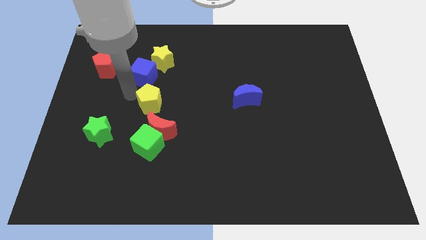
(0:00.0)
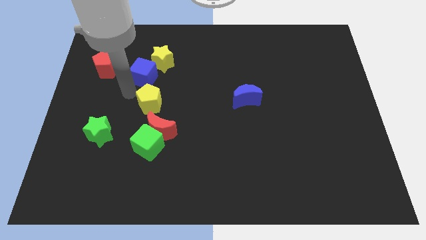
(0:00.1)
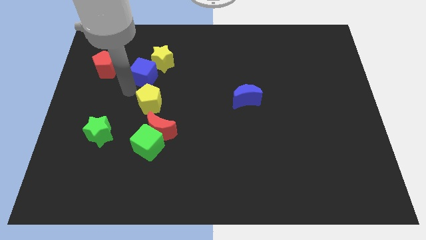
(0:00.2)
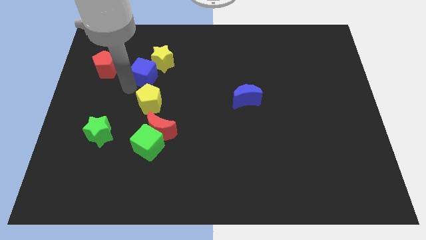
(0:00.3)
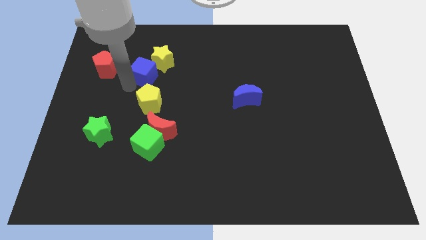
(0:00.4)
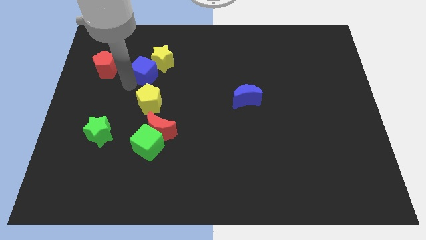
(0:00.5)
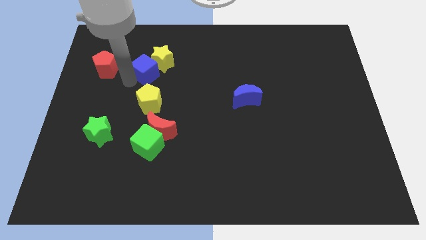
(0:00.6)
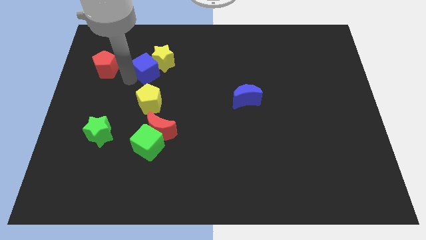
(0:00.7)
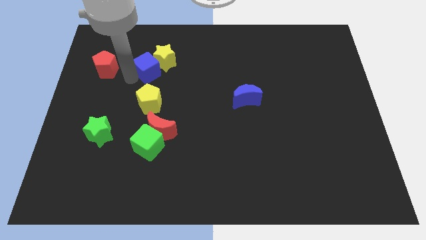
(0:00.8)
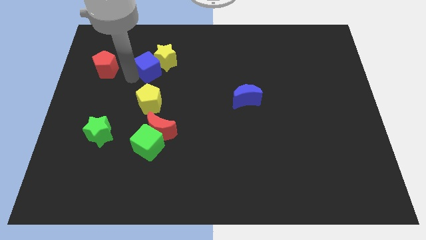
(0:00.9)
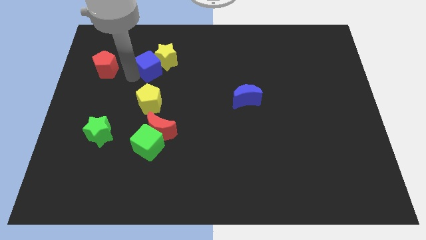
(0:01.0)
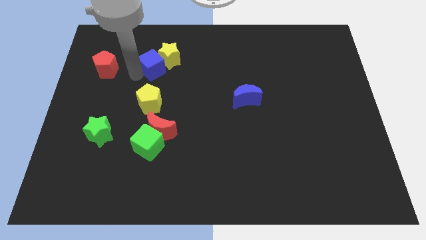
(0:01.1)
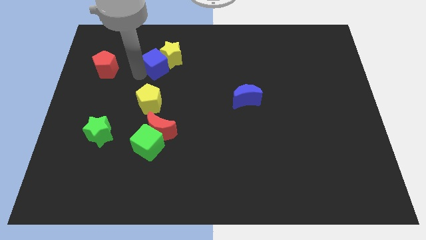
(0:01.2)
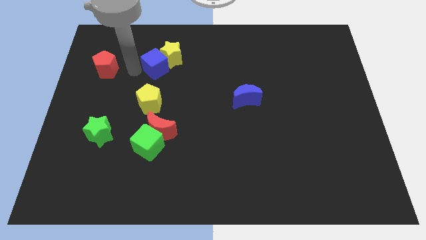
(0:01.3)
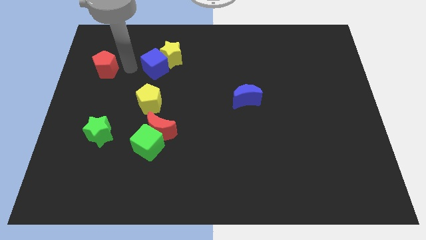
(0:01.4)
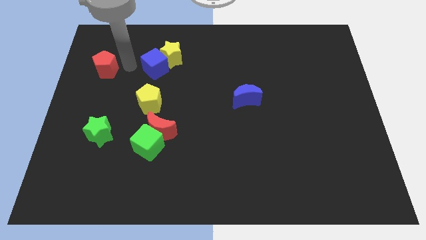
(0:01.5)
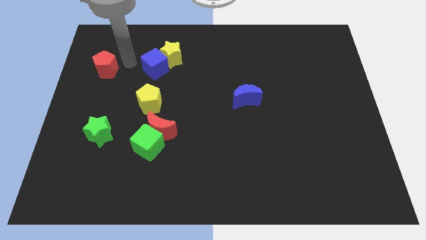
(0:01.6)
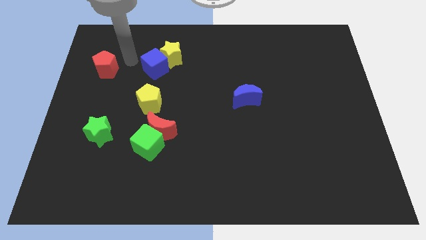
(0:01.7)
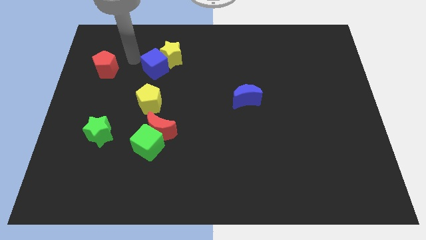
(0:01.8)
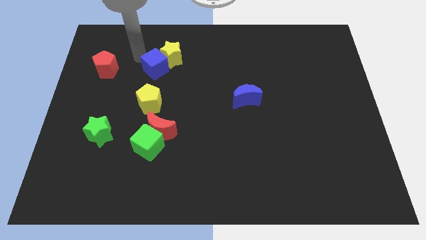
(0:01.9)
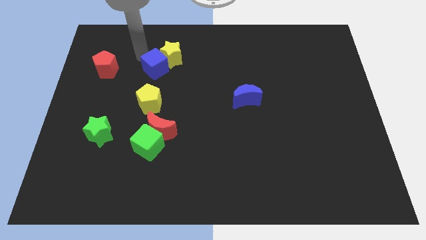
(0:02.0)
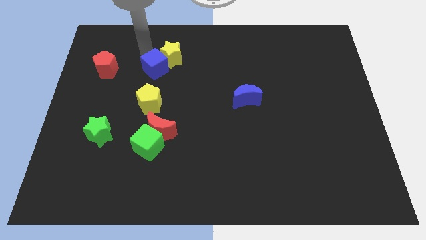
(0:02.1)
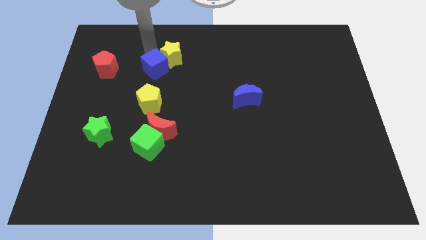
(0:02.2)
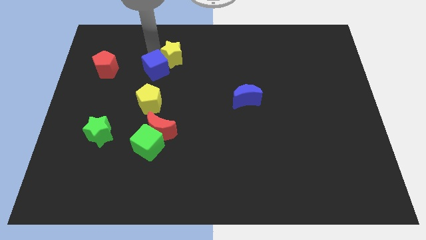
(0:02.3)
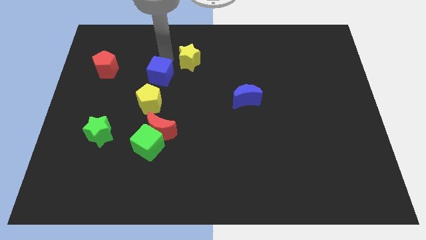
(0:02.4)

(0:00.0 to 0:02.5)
push the blue cube and yellow star towards the top side of the board

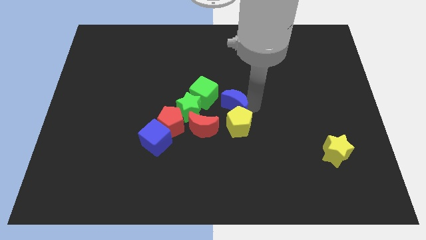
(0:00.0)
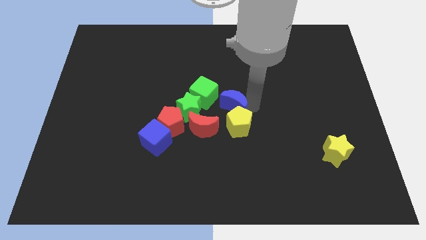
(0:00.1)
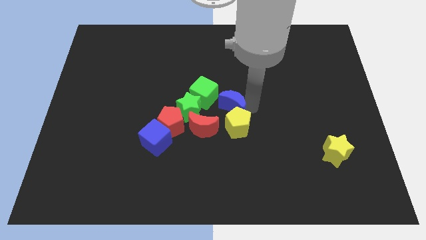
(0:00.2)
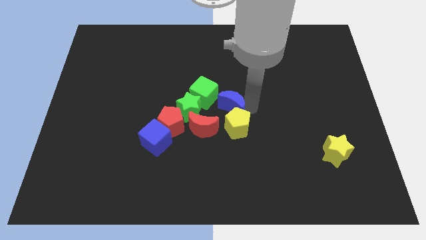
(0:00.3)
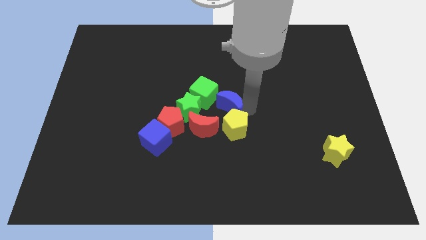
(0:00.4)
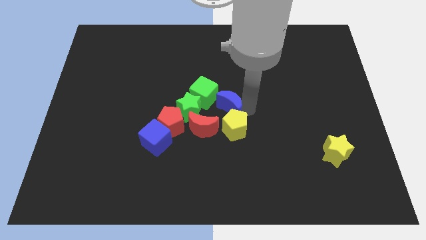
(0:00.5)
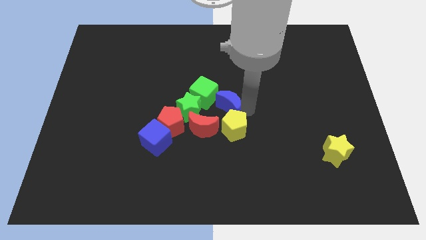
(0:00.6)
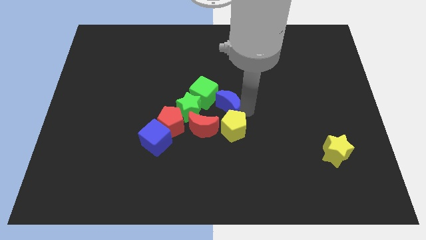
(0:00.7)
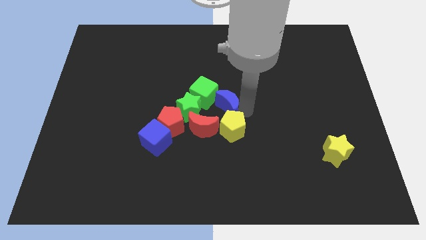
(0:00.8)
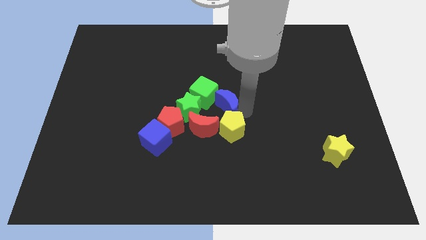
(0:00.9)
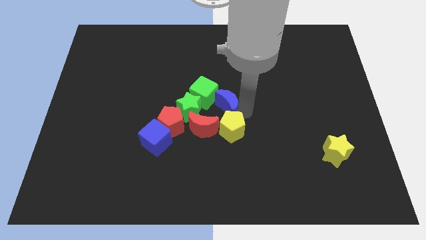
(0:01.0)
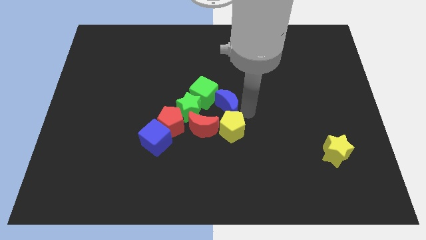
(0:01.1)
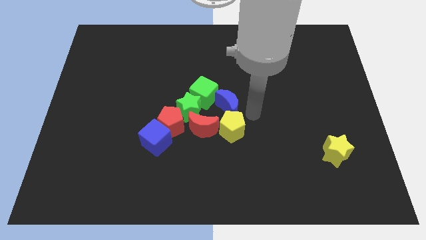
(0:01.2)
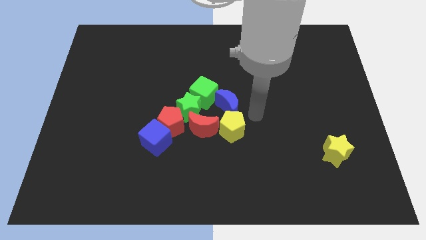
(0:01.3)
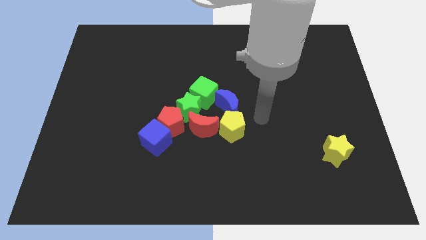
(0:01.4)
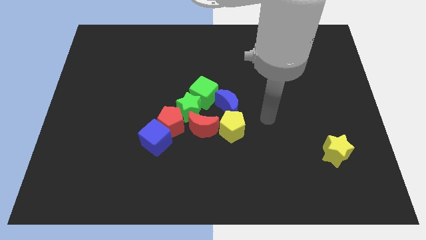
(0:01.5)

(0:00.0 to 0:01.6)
move the blue moon and yellow pentagon into a group of blocks

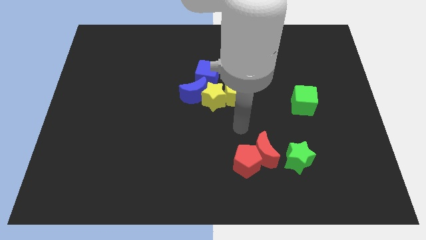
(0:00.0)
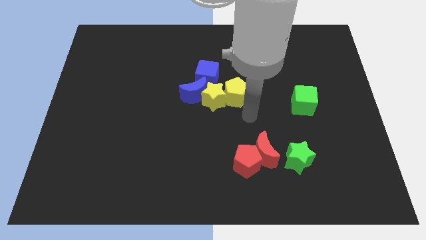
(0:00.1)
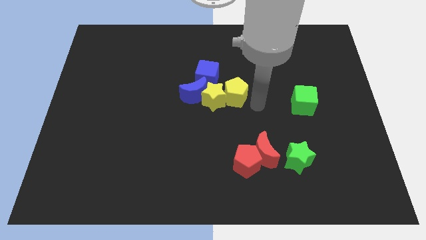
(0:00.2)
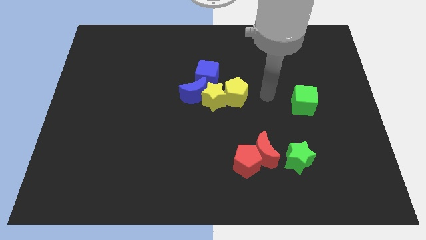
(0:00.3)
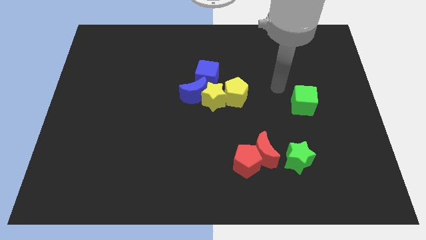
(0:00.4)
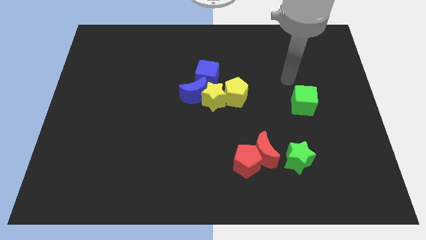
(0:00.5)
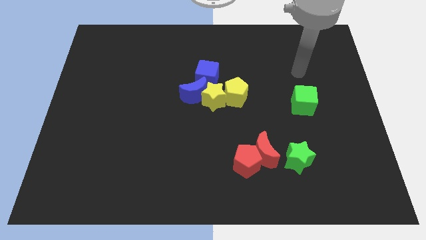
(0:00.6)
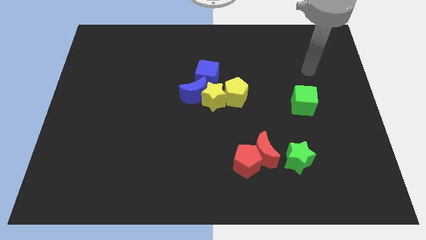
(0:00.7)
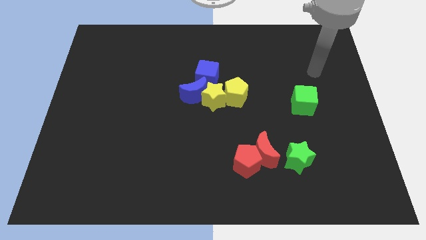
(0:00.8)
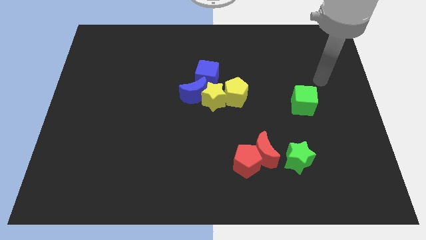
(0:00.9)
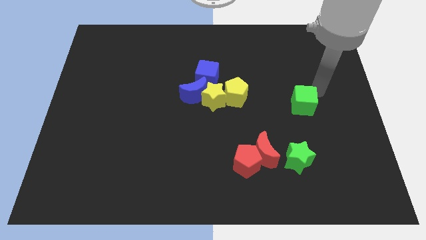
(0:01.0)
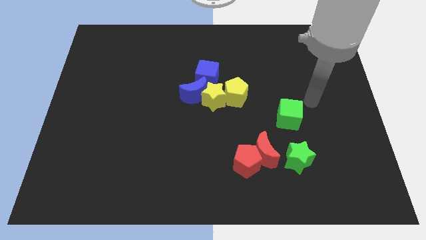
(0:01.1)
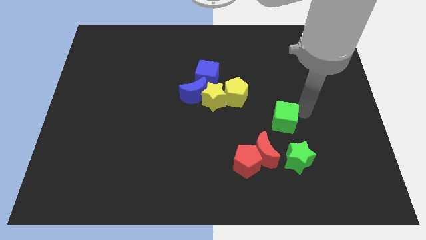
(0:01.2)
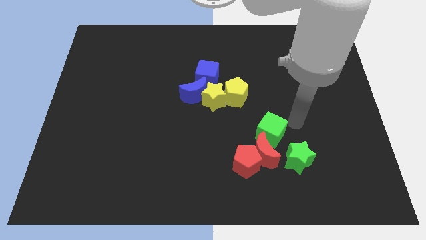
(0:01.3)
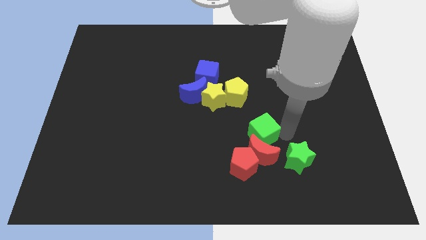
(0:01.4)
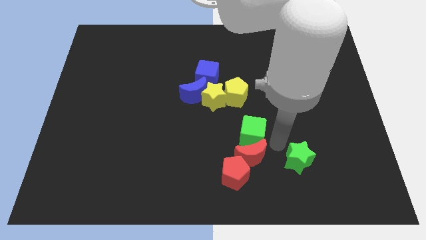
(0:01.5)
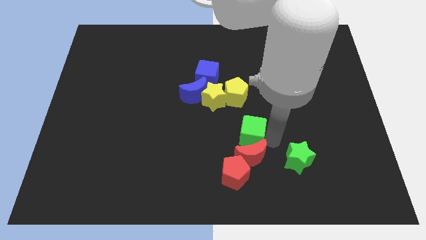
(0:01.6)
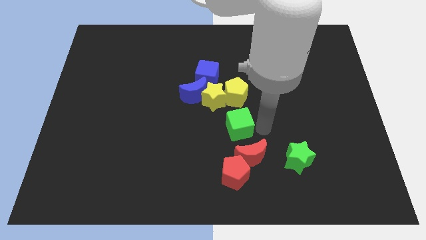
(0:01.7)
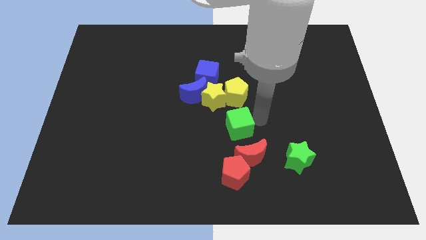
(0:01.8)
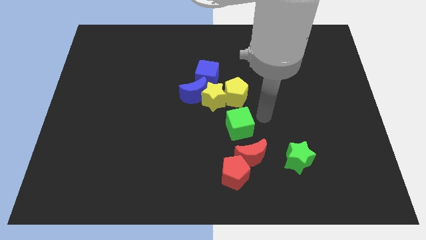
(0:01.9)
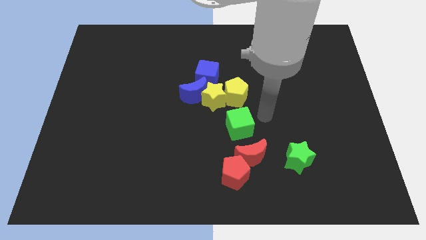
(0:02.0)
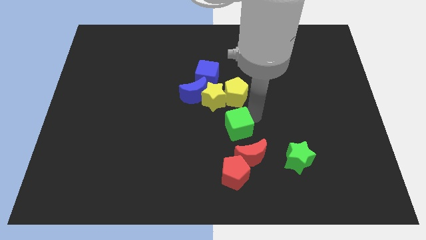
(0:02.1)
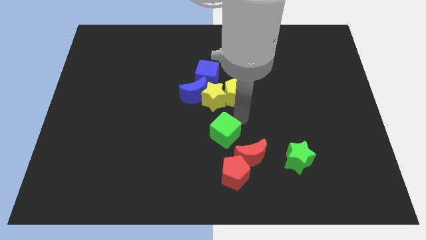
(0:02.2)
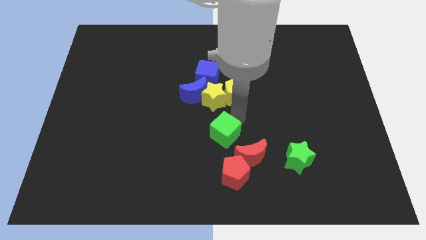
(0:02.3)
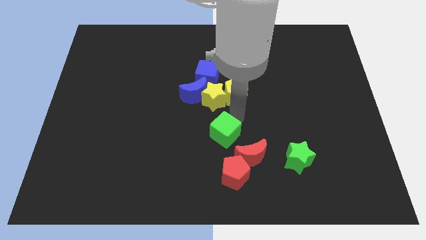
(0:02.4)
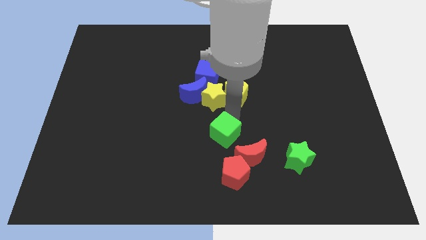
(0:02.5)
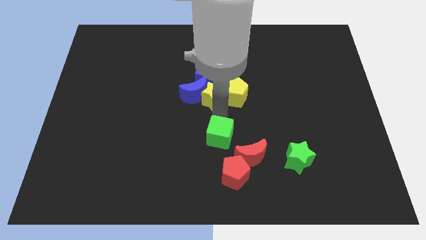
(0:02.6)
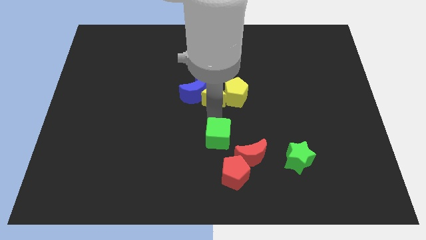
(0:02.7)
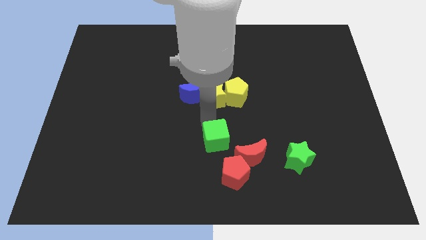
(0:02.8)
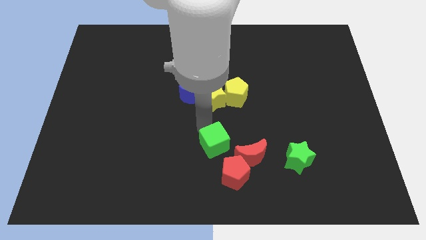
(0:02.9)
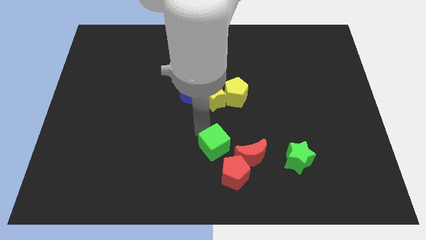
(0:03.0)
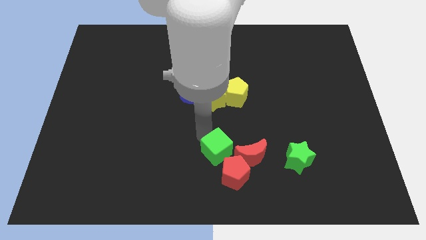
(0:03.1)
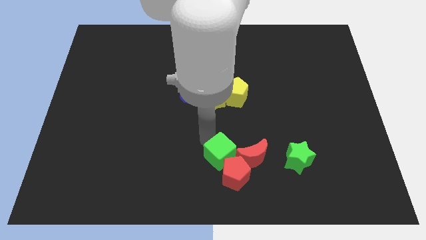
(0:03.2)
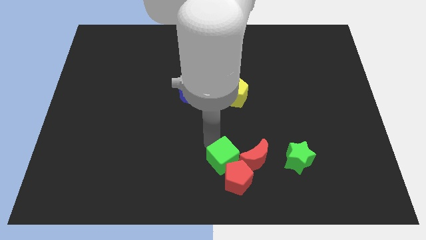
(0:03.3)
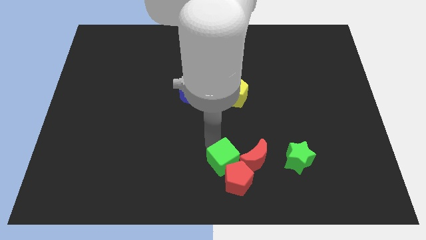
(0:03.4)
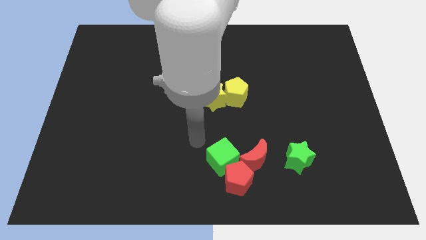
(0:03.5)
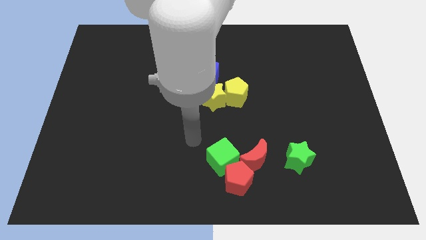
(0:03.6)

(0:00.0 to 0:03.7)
move the green cube to the left of the red blocks

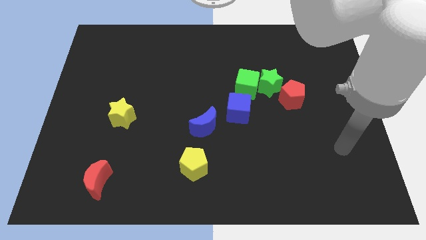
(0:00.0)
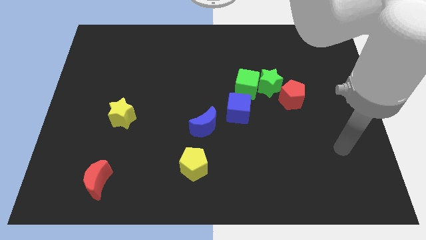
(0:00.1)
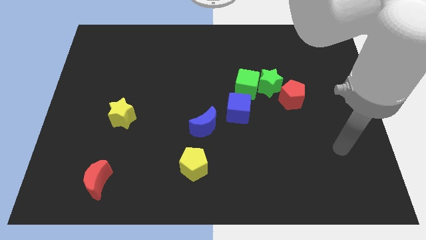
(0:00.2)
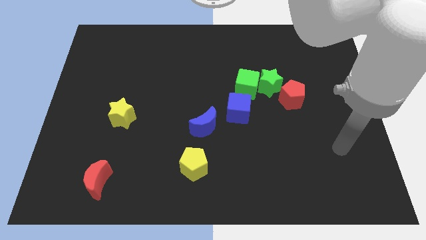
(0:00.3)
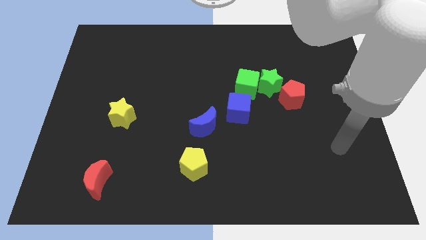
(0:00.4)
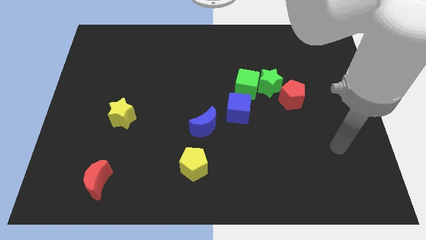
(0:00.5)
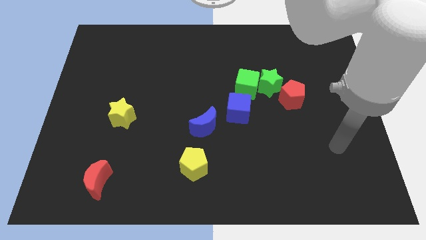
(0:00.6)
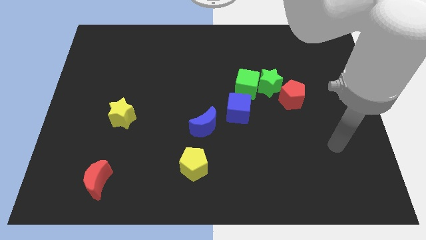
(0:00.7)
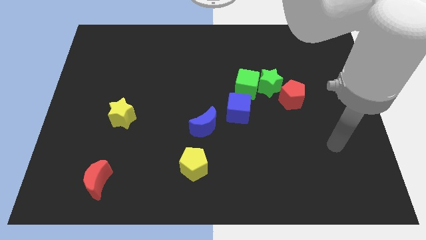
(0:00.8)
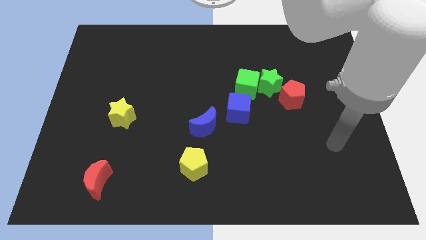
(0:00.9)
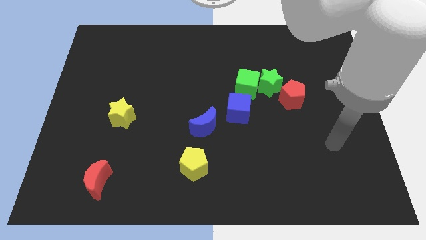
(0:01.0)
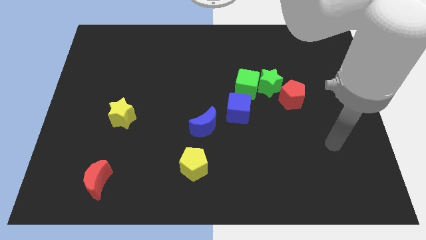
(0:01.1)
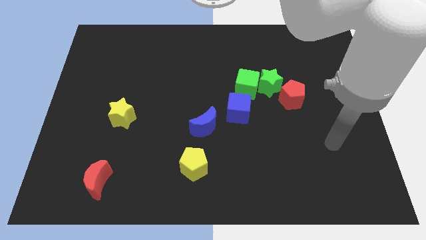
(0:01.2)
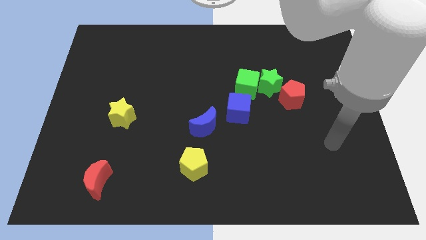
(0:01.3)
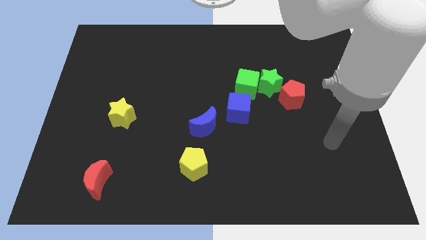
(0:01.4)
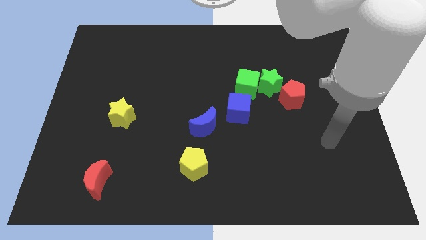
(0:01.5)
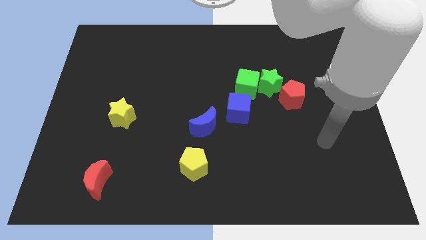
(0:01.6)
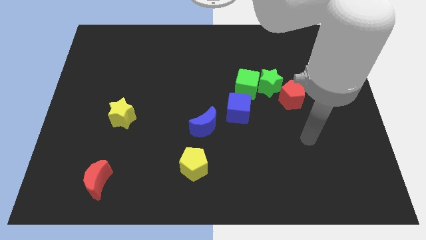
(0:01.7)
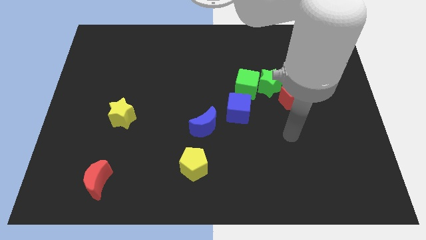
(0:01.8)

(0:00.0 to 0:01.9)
point your arm at the bottom of the red pentagon
